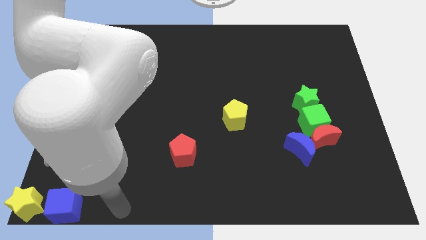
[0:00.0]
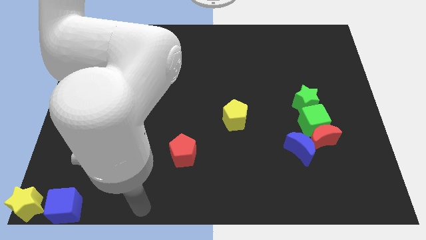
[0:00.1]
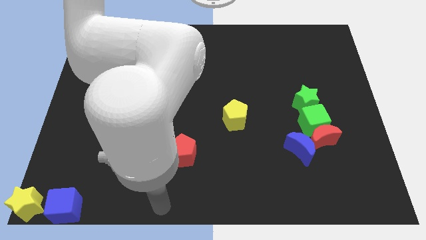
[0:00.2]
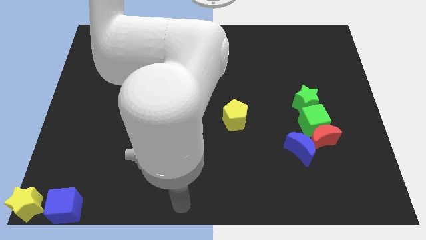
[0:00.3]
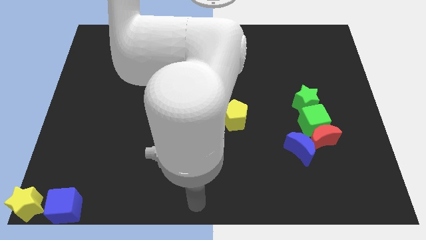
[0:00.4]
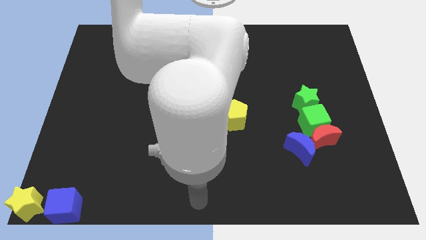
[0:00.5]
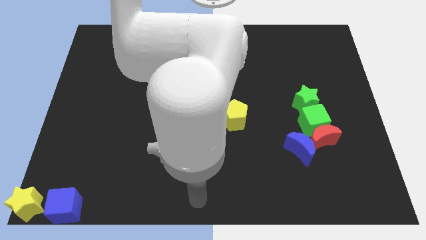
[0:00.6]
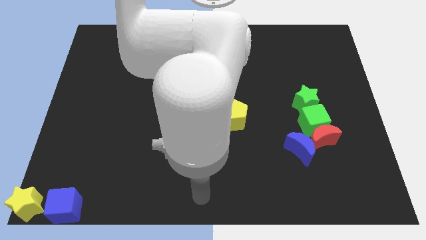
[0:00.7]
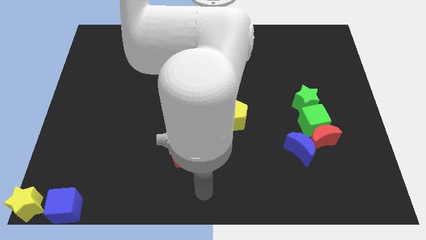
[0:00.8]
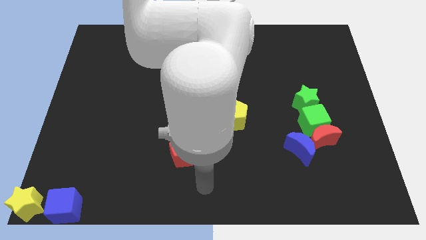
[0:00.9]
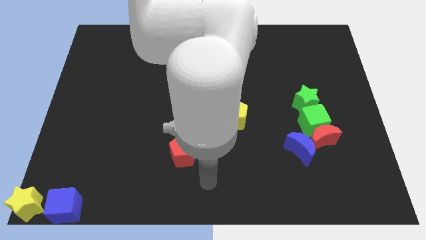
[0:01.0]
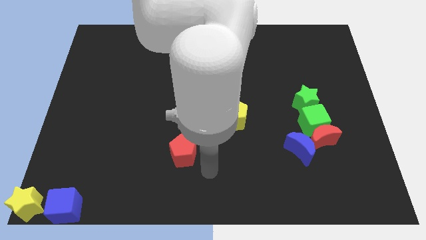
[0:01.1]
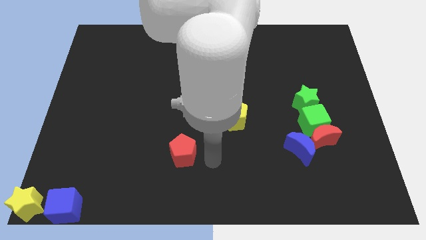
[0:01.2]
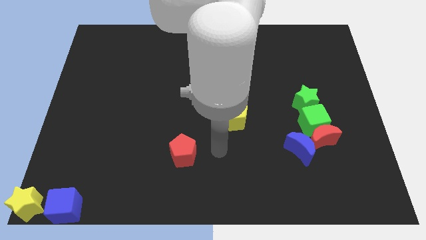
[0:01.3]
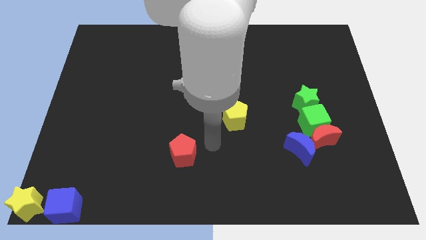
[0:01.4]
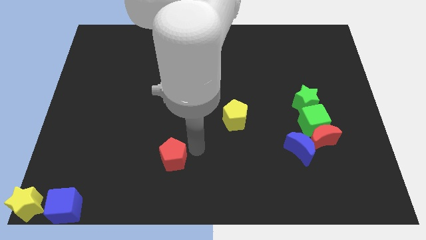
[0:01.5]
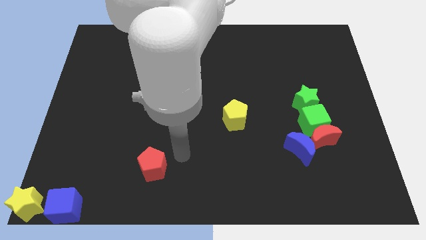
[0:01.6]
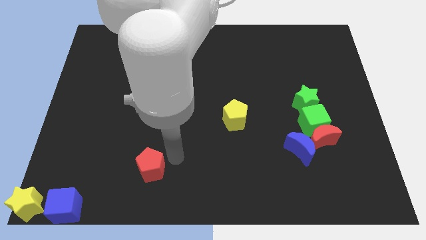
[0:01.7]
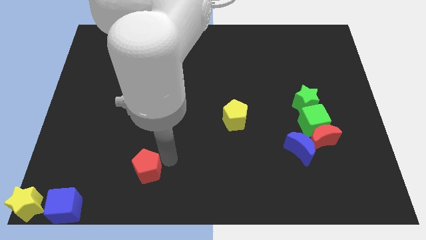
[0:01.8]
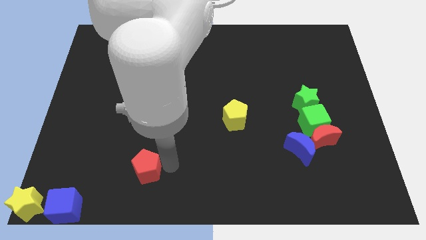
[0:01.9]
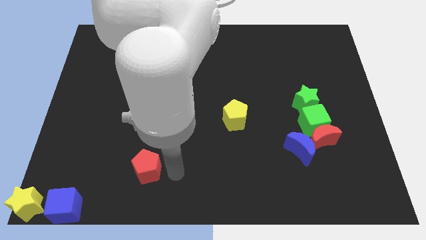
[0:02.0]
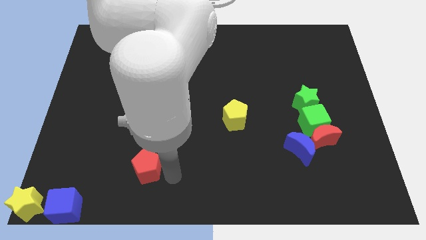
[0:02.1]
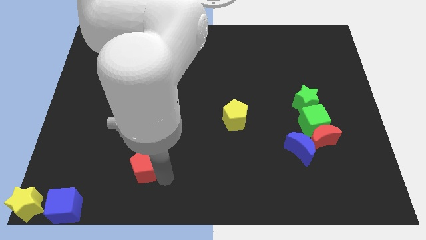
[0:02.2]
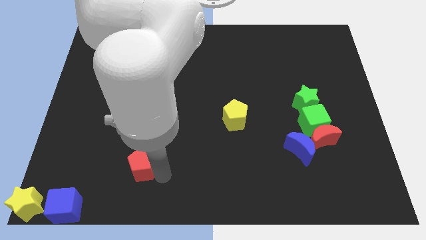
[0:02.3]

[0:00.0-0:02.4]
place the red pentagon towards blue cube

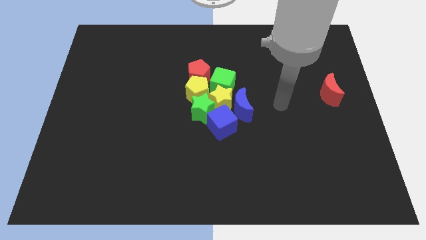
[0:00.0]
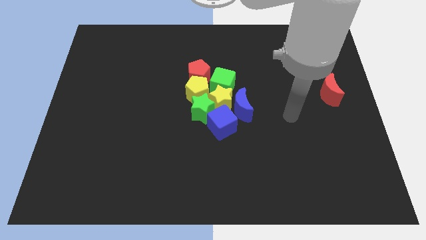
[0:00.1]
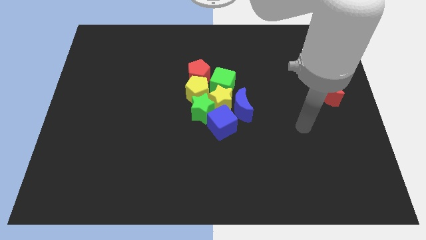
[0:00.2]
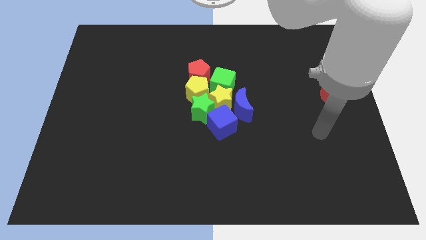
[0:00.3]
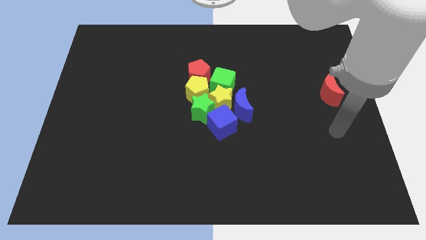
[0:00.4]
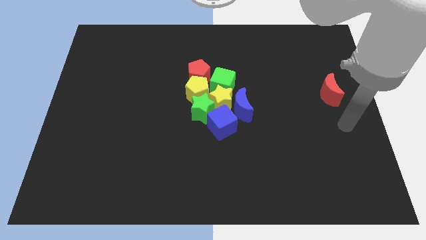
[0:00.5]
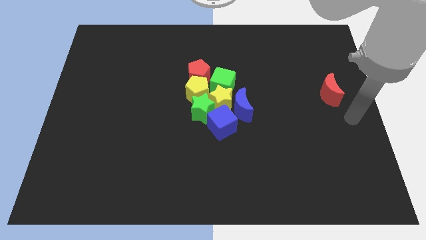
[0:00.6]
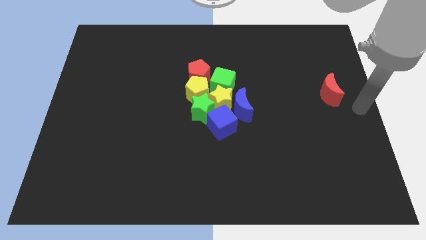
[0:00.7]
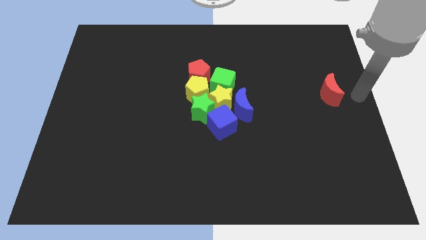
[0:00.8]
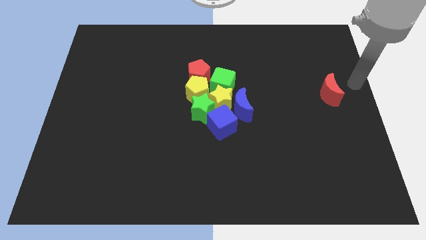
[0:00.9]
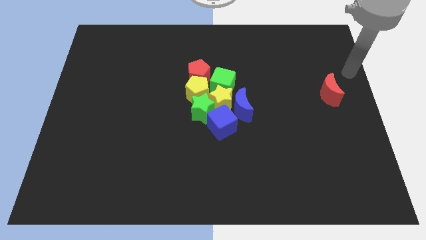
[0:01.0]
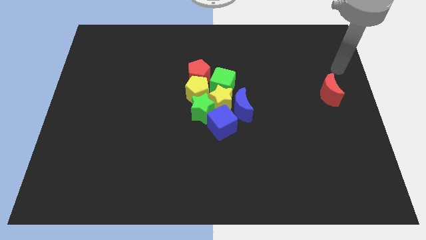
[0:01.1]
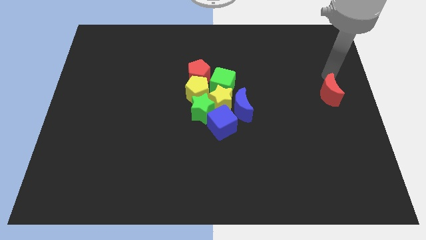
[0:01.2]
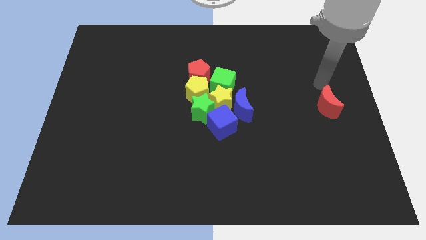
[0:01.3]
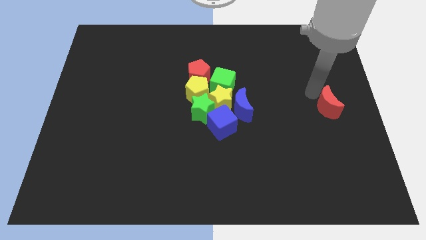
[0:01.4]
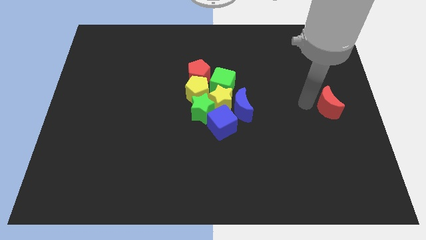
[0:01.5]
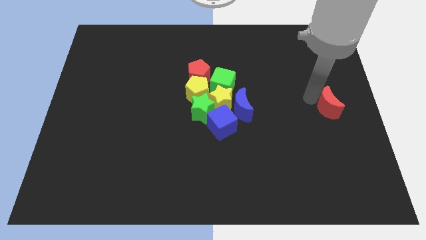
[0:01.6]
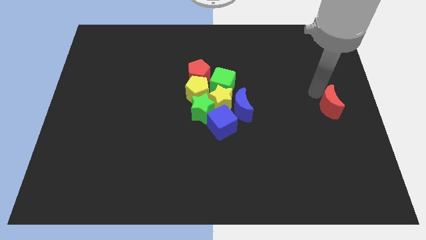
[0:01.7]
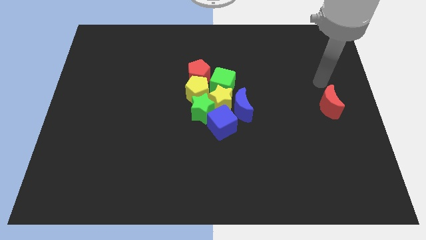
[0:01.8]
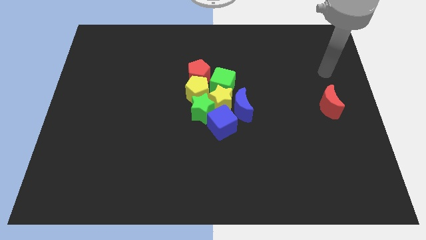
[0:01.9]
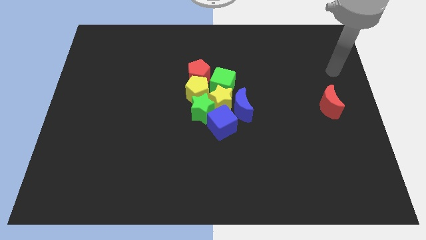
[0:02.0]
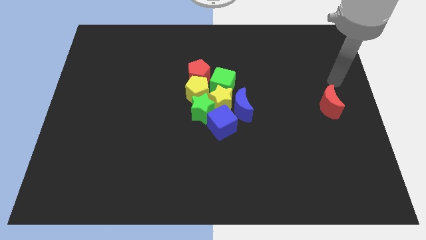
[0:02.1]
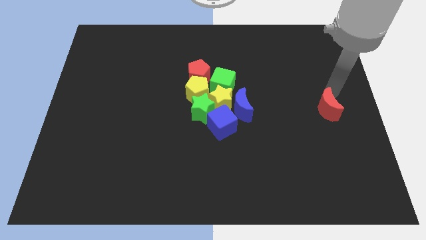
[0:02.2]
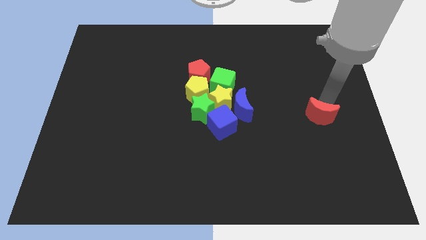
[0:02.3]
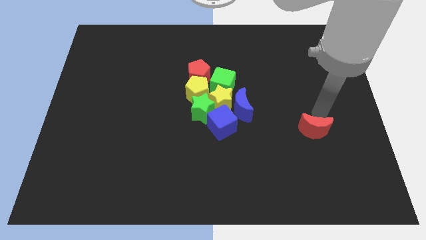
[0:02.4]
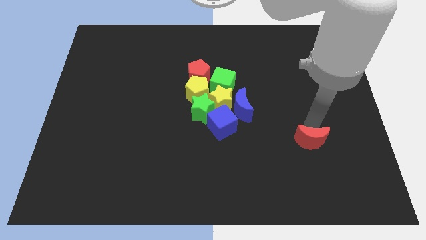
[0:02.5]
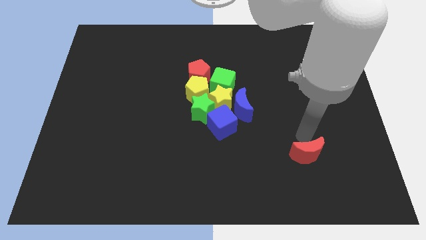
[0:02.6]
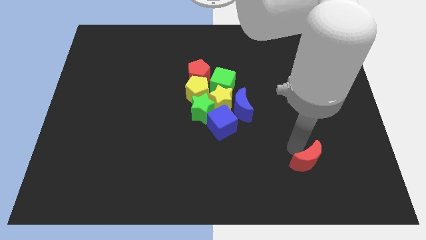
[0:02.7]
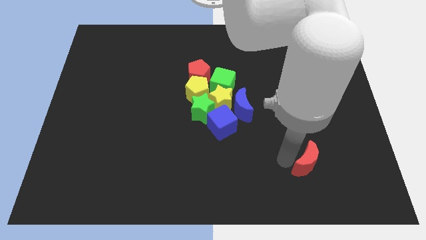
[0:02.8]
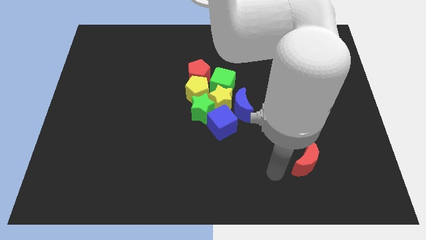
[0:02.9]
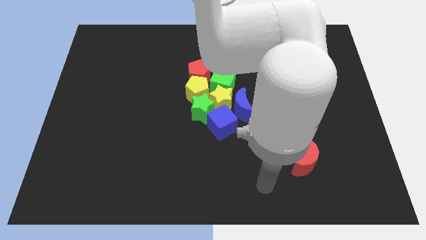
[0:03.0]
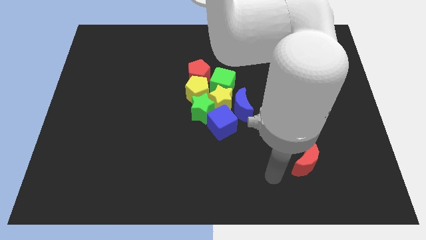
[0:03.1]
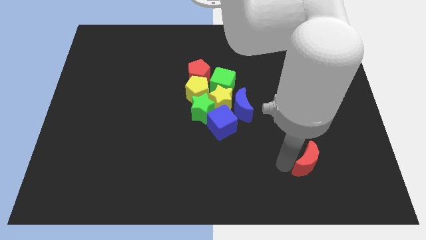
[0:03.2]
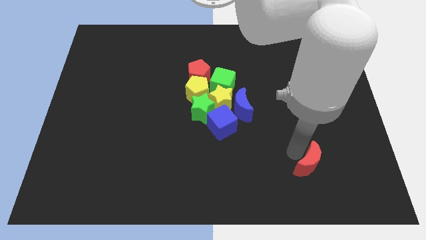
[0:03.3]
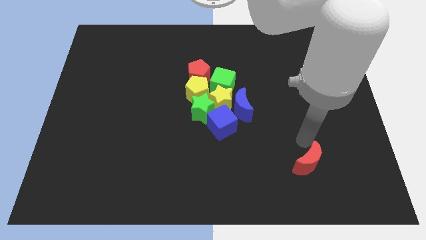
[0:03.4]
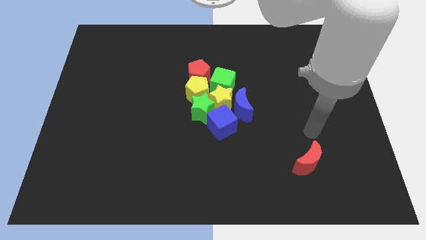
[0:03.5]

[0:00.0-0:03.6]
push the red crescent diagonally to blue cube

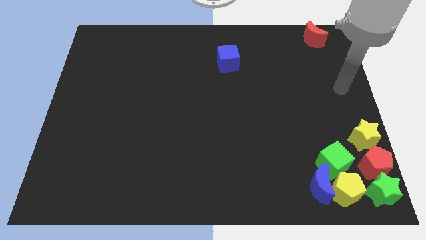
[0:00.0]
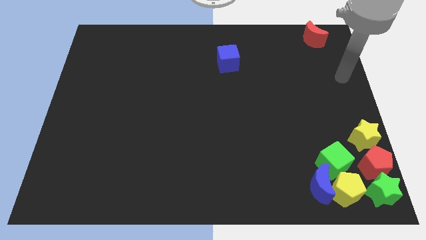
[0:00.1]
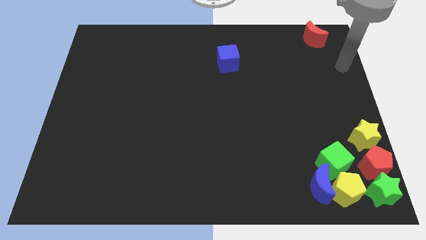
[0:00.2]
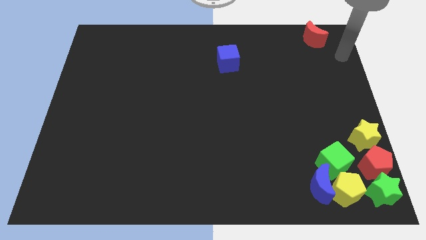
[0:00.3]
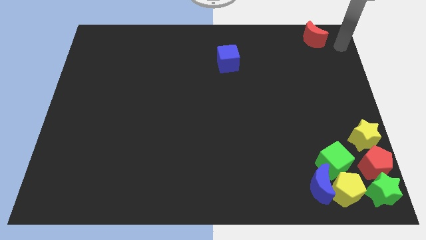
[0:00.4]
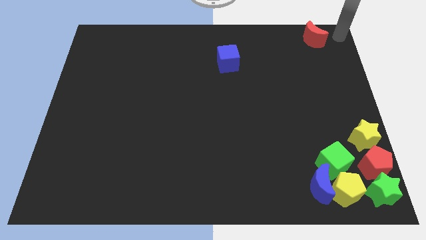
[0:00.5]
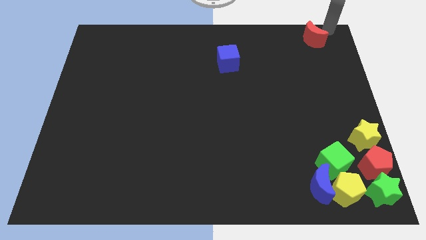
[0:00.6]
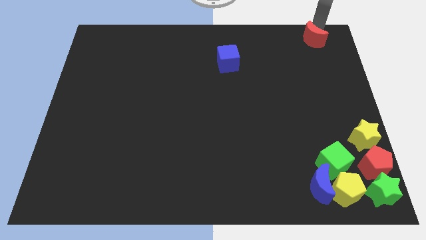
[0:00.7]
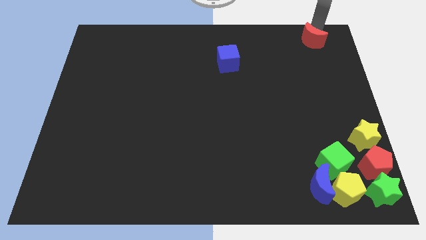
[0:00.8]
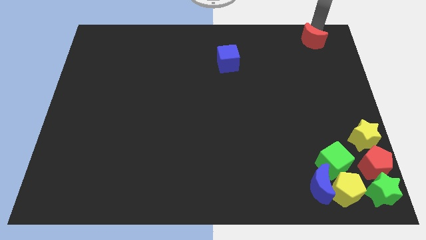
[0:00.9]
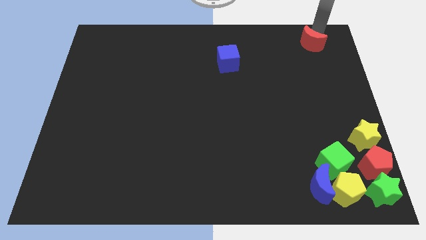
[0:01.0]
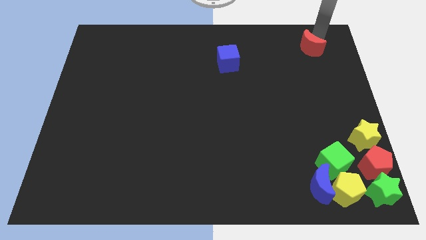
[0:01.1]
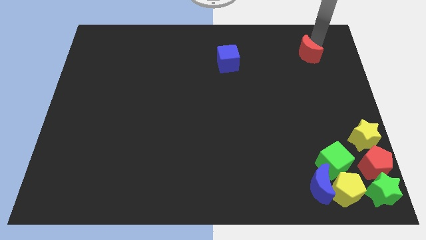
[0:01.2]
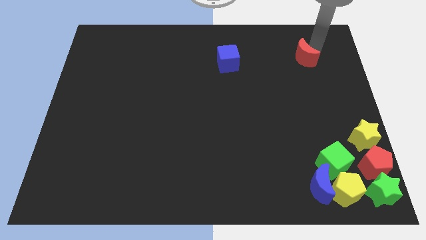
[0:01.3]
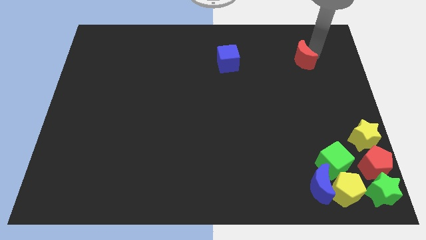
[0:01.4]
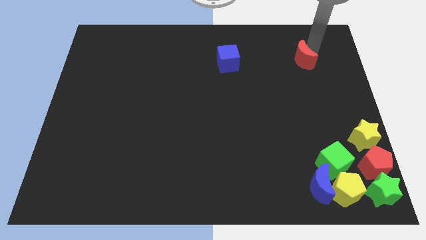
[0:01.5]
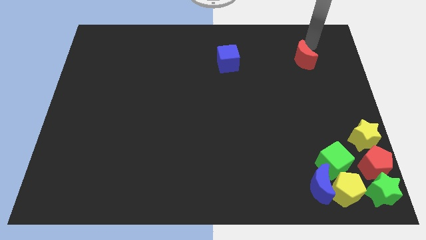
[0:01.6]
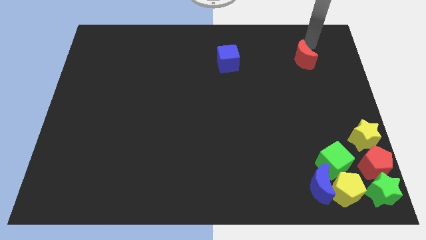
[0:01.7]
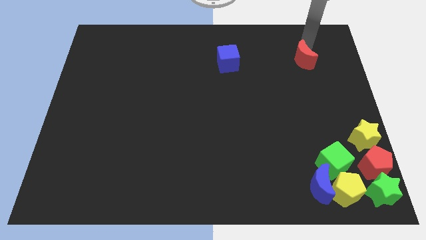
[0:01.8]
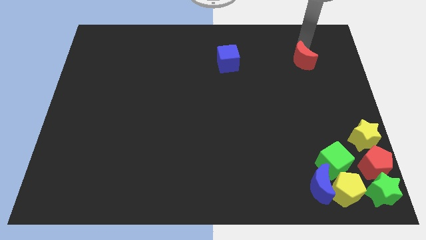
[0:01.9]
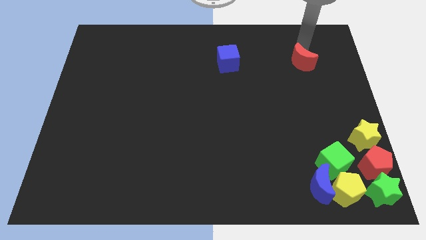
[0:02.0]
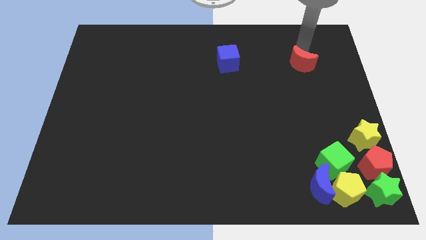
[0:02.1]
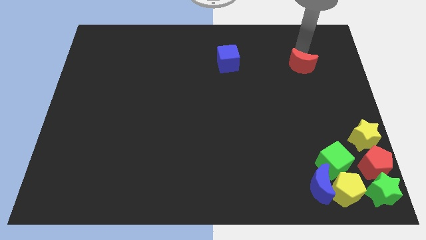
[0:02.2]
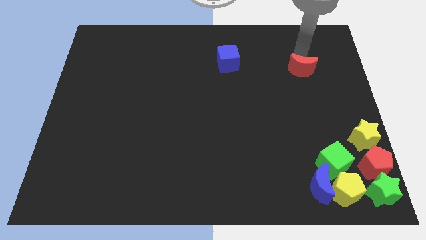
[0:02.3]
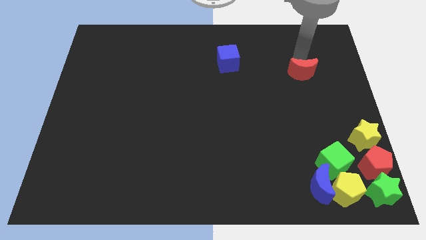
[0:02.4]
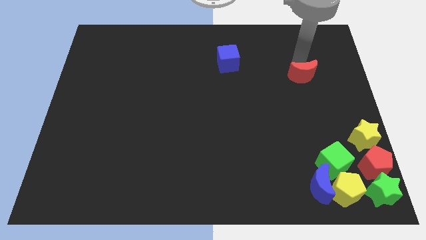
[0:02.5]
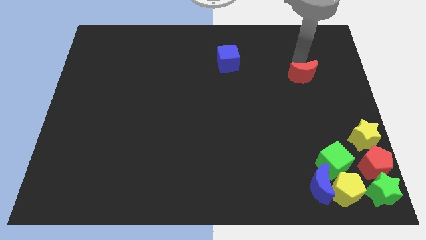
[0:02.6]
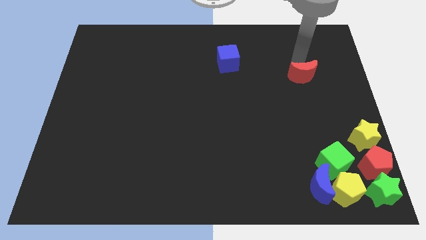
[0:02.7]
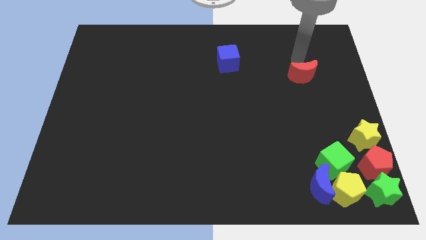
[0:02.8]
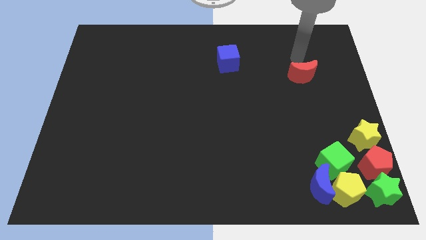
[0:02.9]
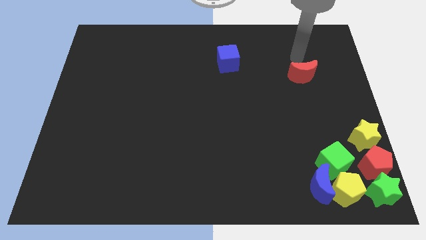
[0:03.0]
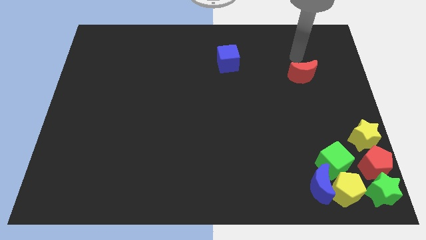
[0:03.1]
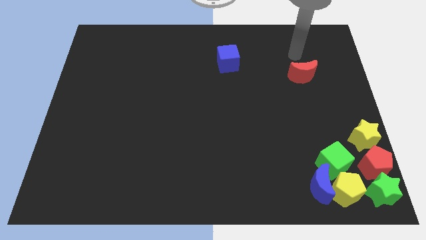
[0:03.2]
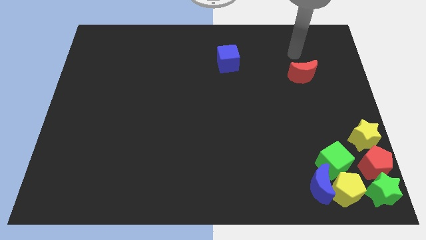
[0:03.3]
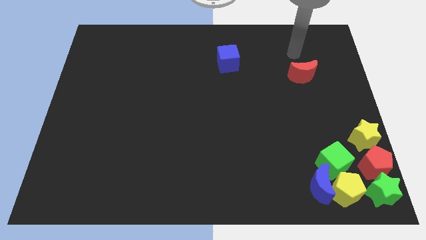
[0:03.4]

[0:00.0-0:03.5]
push the red crescent towards the bottom
